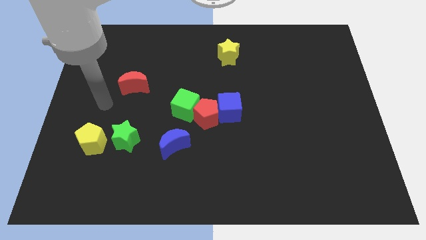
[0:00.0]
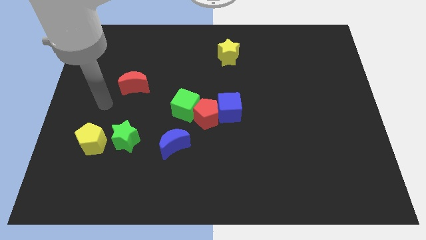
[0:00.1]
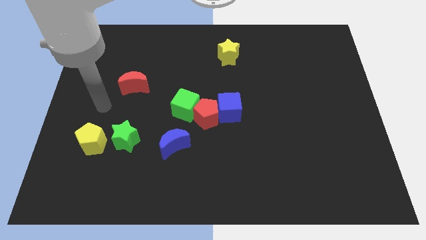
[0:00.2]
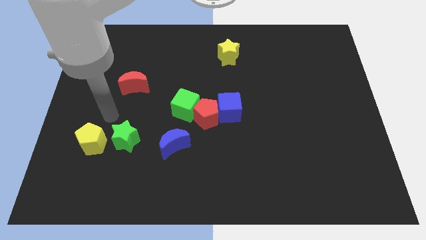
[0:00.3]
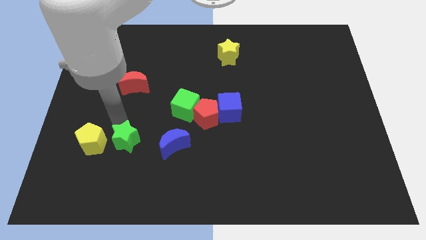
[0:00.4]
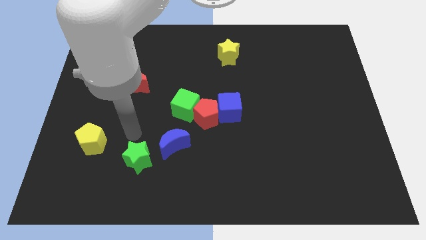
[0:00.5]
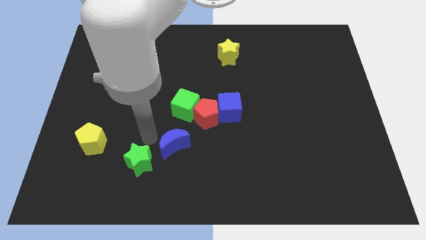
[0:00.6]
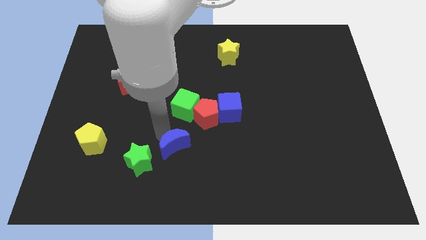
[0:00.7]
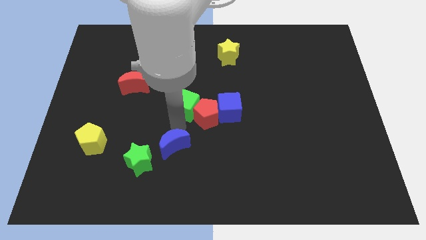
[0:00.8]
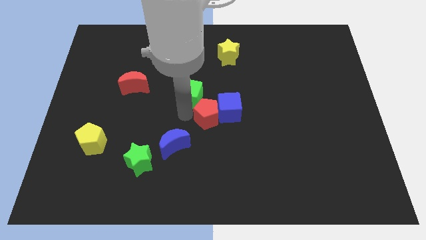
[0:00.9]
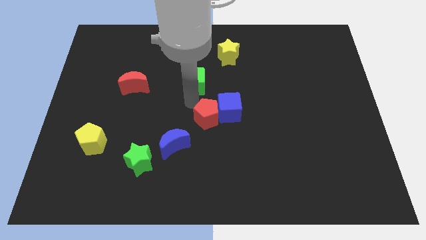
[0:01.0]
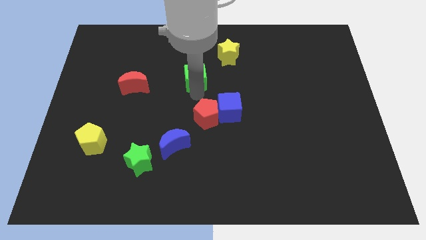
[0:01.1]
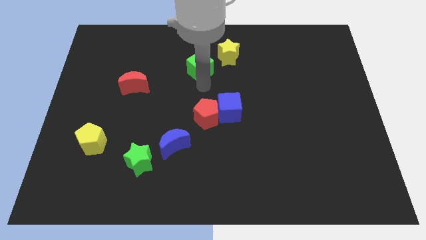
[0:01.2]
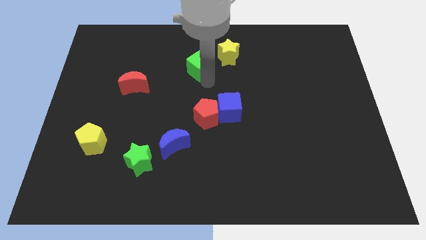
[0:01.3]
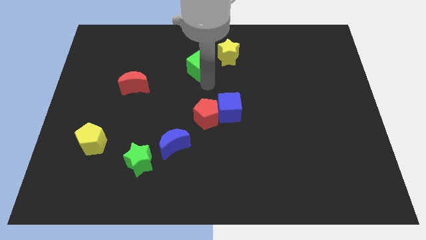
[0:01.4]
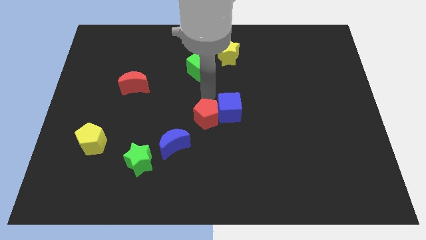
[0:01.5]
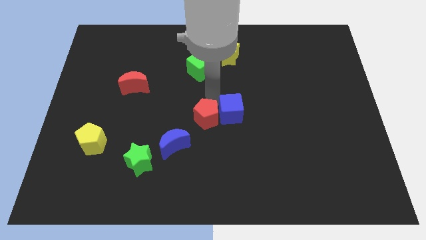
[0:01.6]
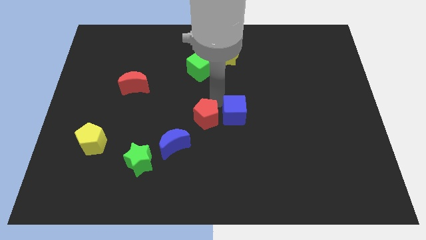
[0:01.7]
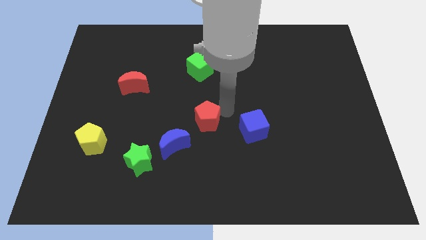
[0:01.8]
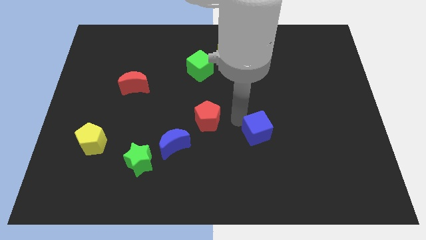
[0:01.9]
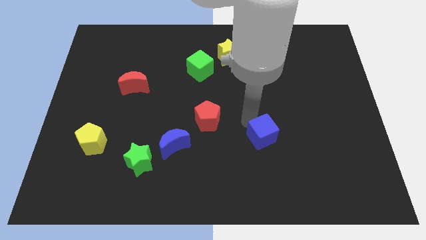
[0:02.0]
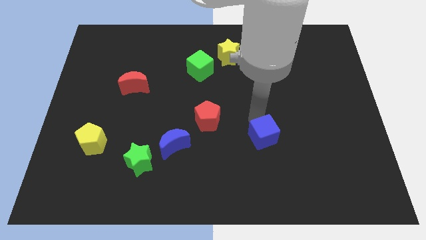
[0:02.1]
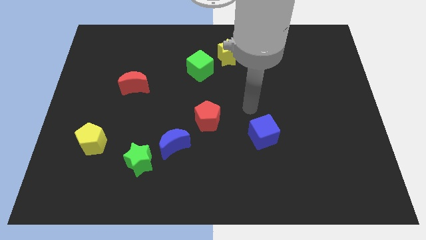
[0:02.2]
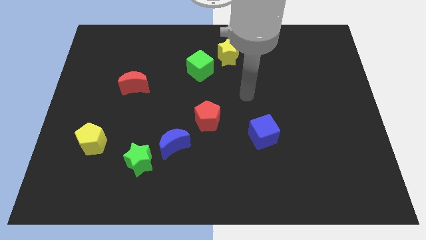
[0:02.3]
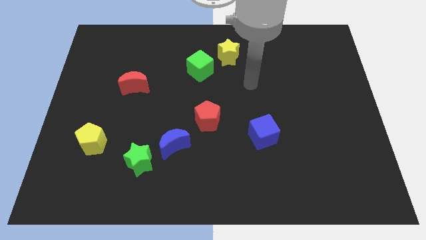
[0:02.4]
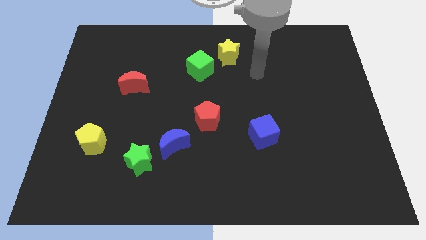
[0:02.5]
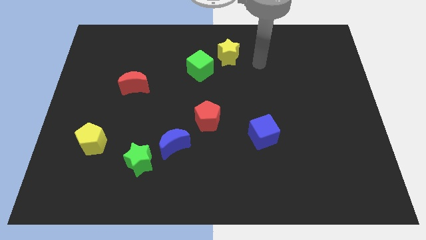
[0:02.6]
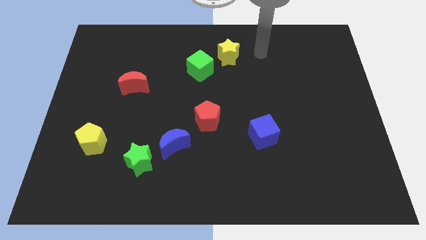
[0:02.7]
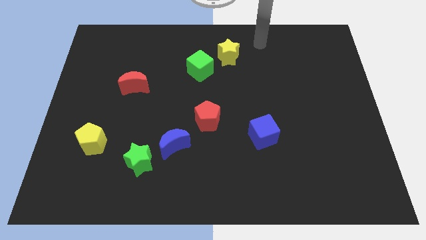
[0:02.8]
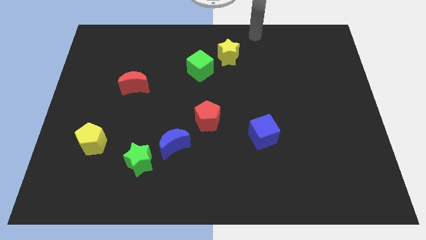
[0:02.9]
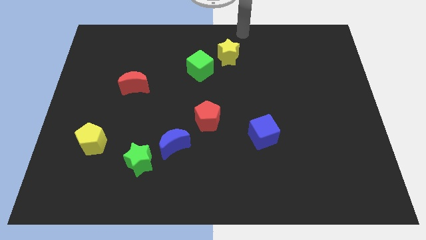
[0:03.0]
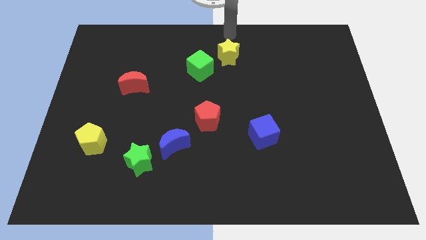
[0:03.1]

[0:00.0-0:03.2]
move arm towards top of the board

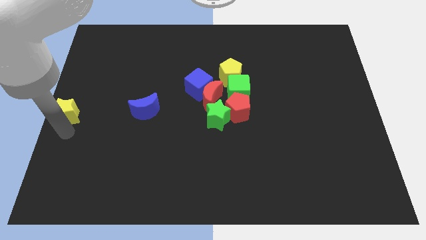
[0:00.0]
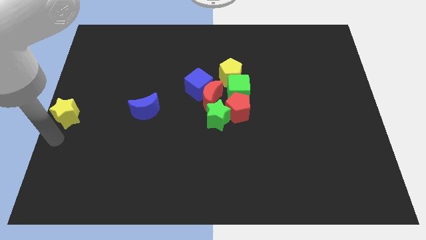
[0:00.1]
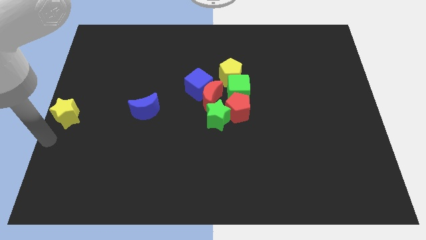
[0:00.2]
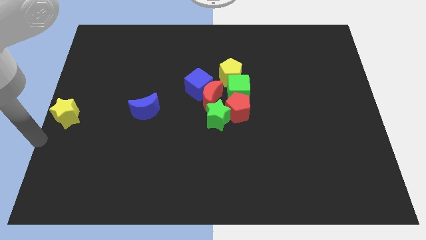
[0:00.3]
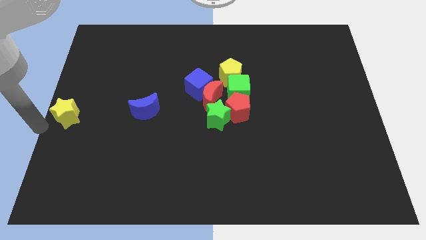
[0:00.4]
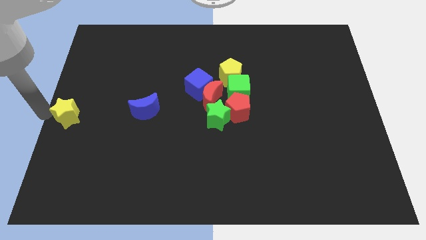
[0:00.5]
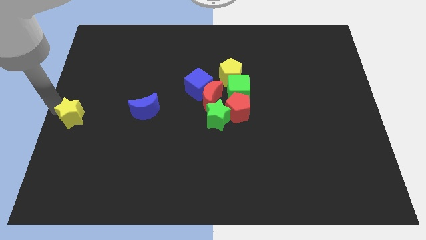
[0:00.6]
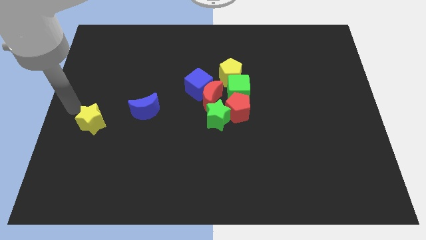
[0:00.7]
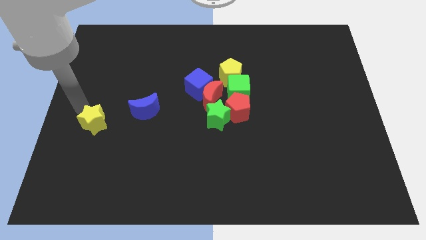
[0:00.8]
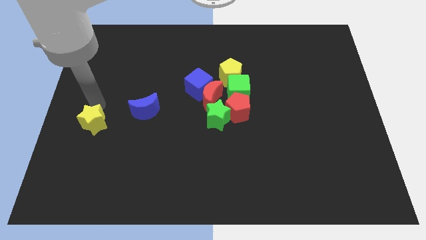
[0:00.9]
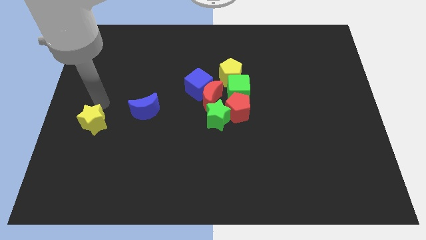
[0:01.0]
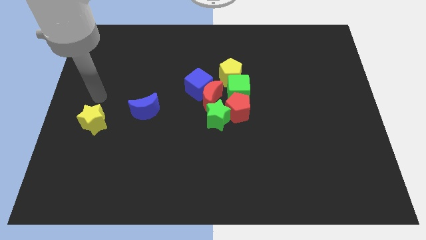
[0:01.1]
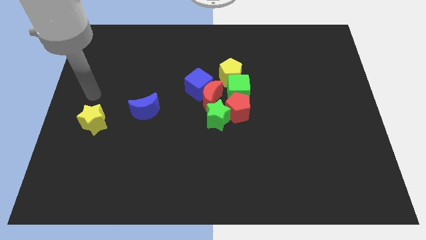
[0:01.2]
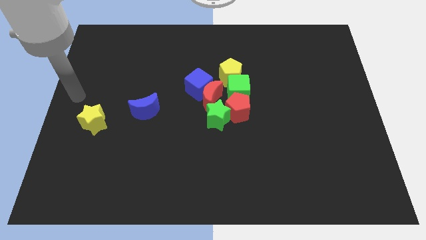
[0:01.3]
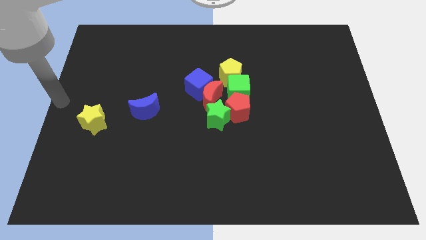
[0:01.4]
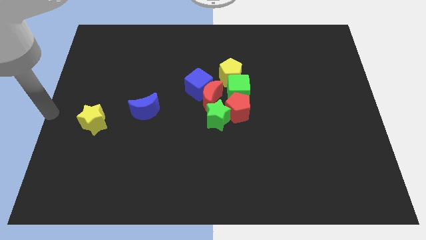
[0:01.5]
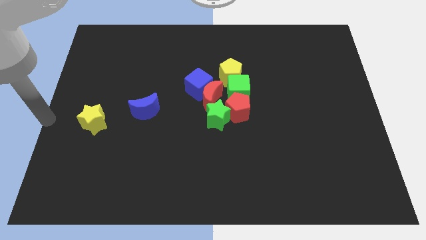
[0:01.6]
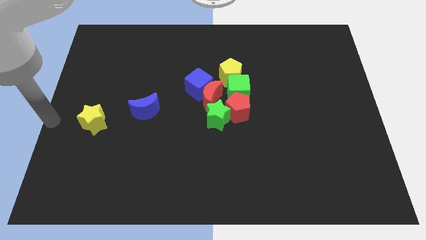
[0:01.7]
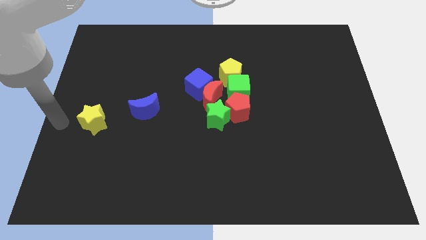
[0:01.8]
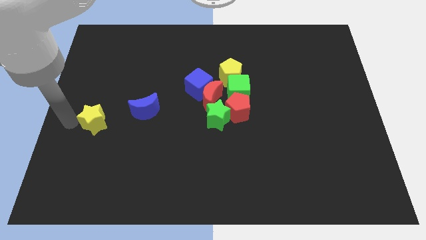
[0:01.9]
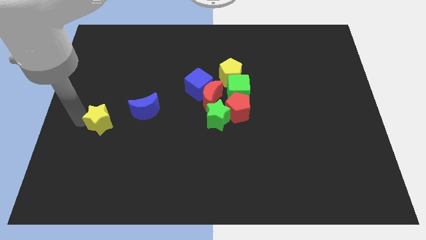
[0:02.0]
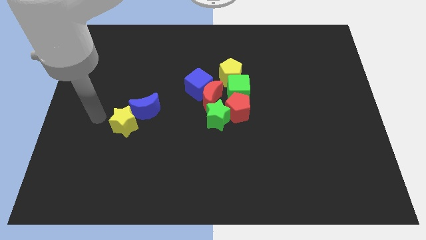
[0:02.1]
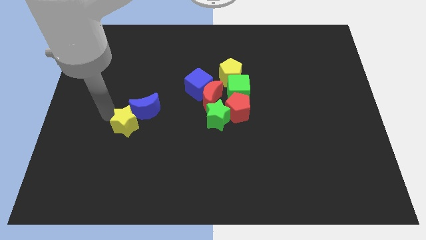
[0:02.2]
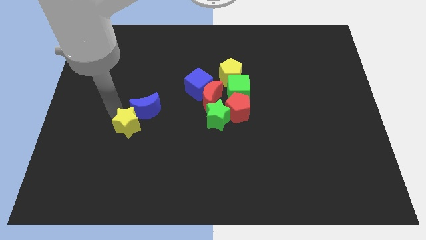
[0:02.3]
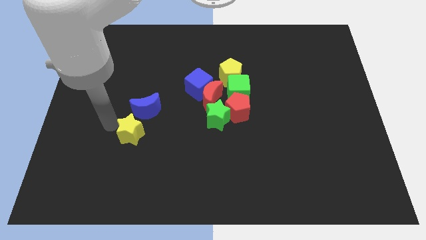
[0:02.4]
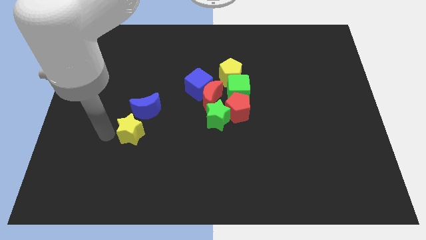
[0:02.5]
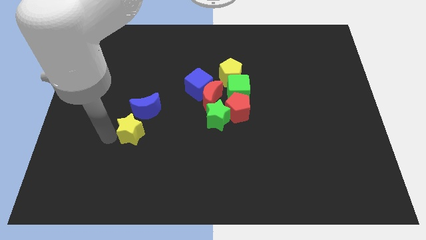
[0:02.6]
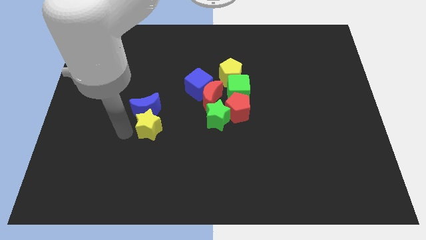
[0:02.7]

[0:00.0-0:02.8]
push the yellow star to the bottom of the blue crescent

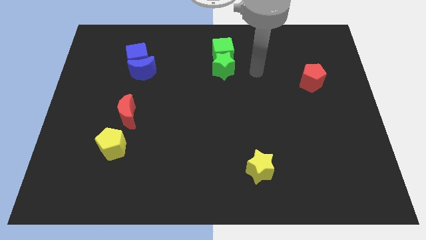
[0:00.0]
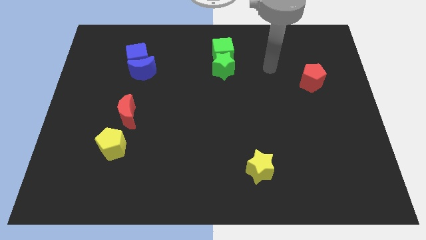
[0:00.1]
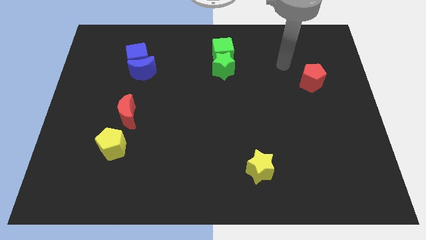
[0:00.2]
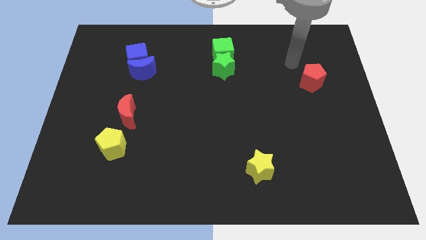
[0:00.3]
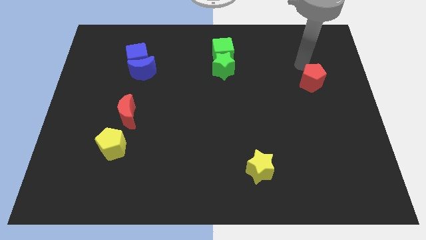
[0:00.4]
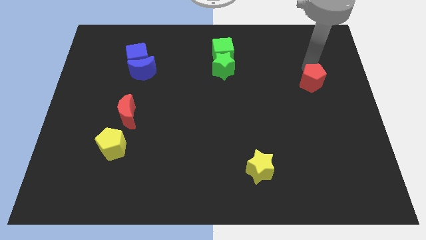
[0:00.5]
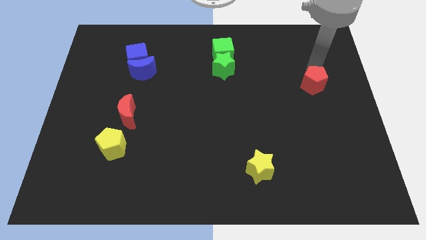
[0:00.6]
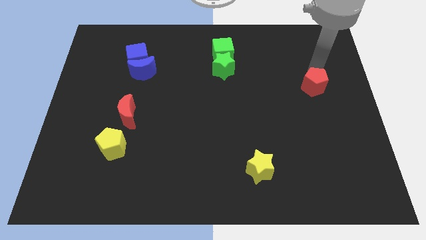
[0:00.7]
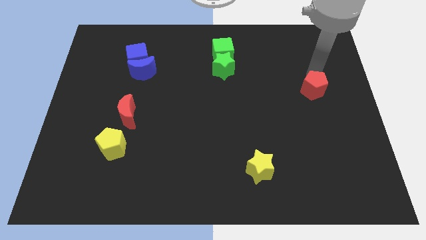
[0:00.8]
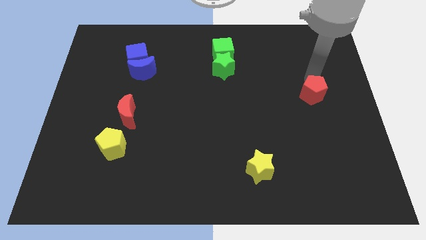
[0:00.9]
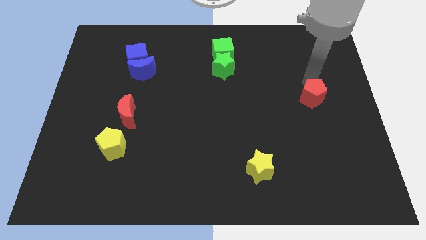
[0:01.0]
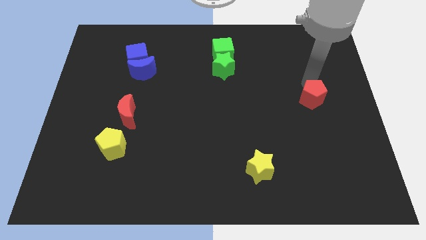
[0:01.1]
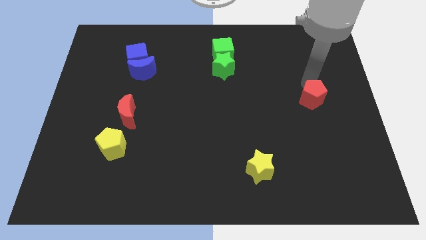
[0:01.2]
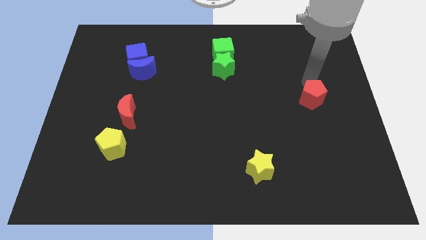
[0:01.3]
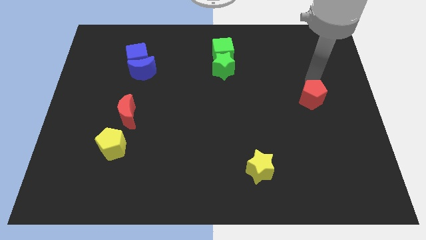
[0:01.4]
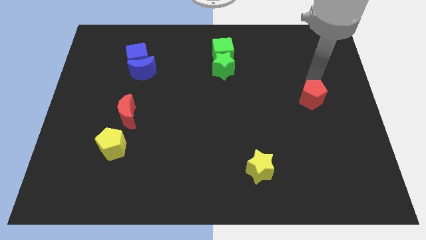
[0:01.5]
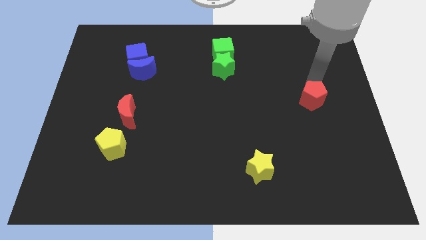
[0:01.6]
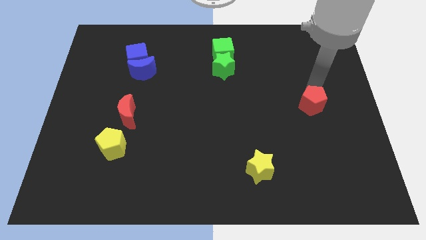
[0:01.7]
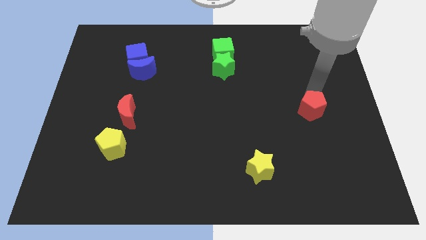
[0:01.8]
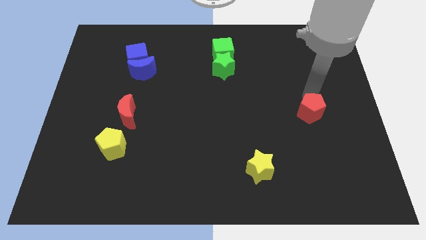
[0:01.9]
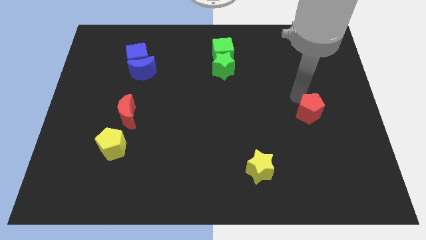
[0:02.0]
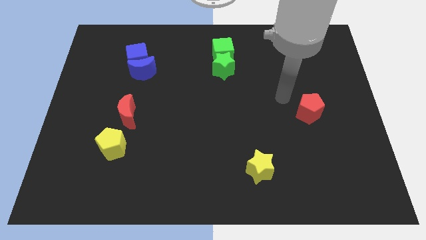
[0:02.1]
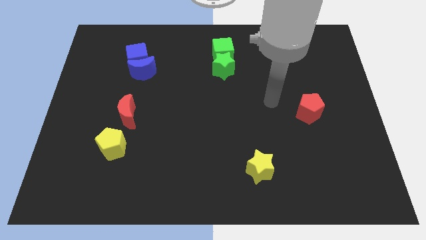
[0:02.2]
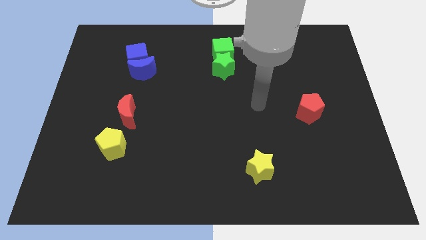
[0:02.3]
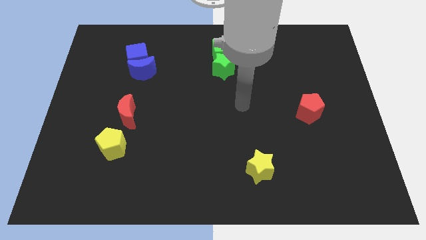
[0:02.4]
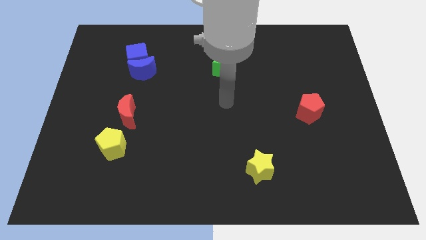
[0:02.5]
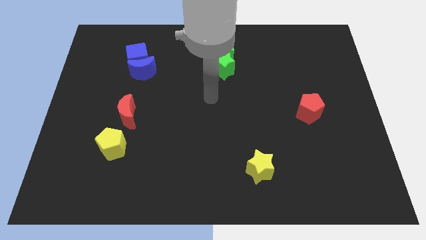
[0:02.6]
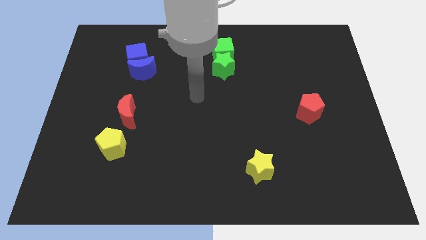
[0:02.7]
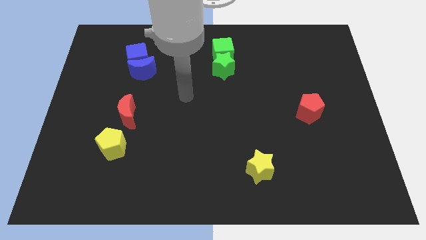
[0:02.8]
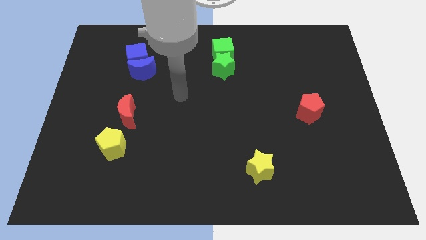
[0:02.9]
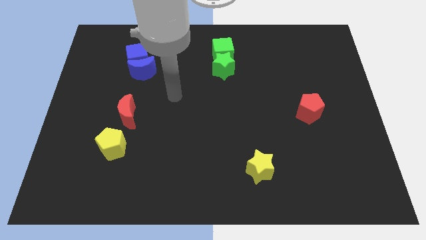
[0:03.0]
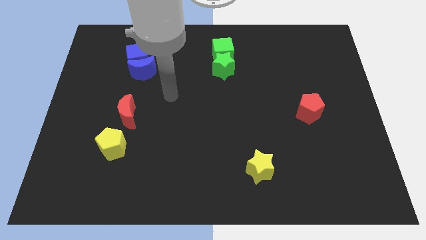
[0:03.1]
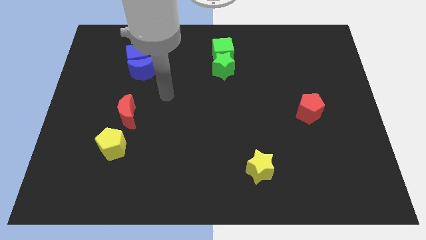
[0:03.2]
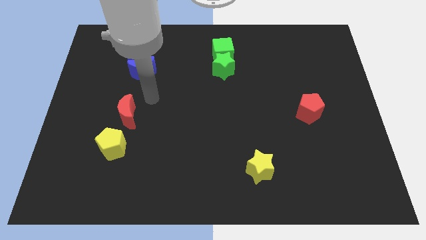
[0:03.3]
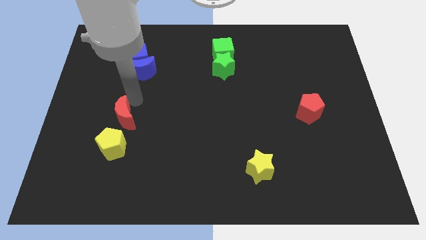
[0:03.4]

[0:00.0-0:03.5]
push the red pentagon towards the yellow star
